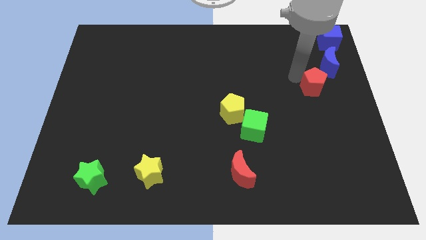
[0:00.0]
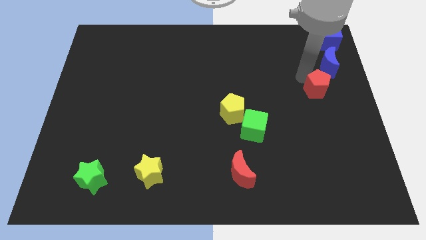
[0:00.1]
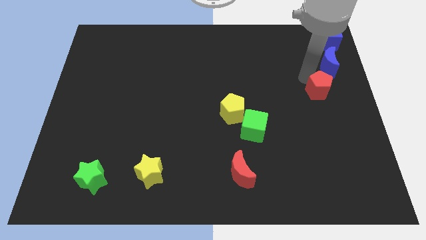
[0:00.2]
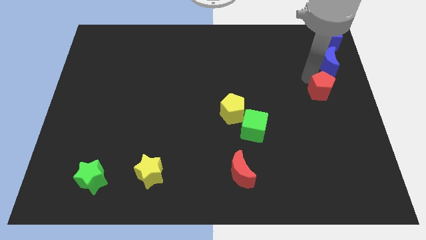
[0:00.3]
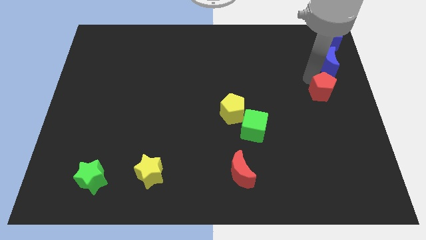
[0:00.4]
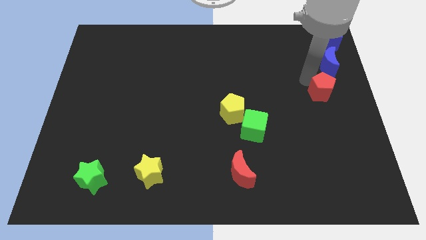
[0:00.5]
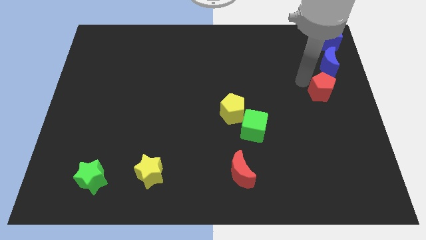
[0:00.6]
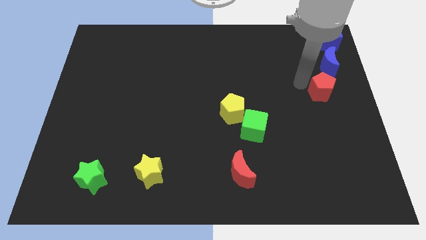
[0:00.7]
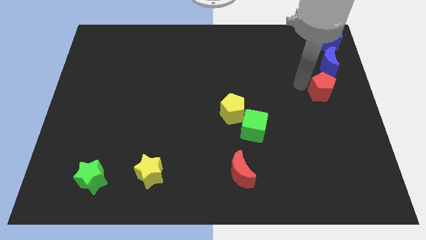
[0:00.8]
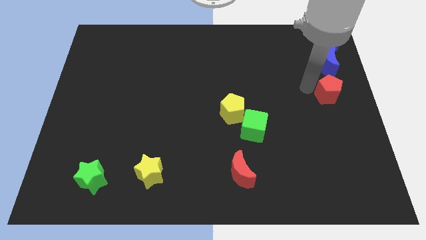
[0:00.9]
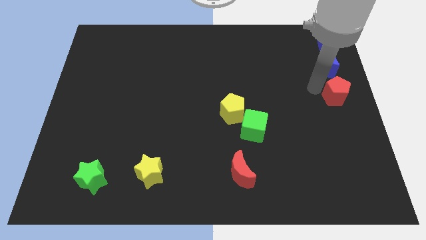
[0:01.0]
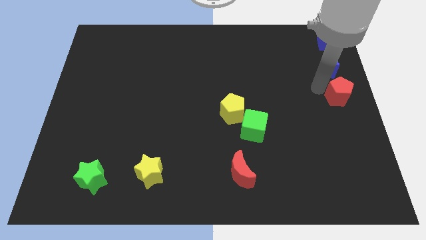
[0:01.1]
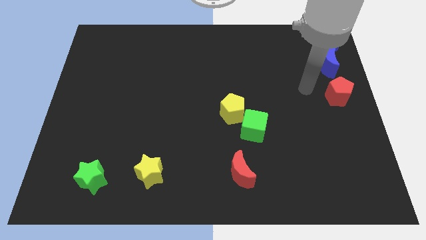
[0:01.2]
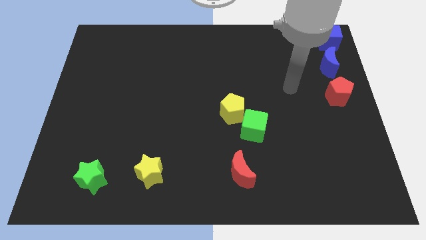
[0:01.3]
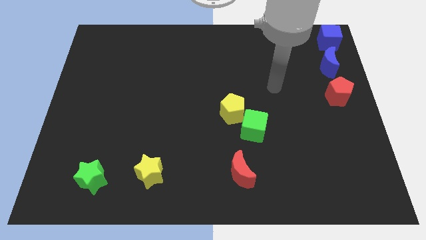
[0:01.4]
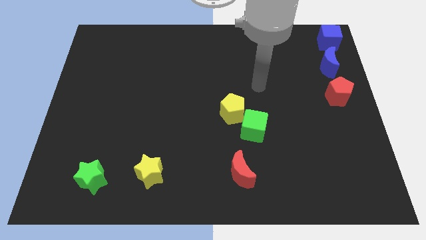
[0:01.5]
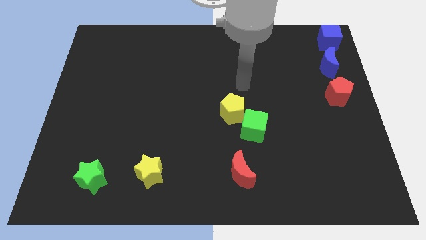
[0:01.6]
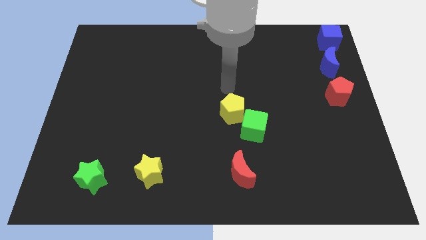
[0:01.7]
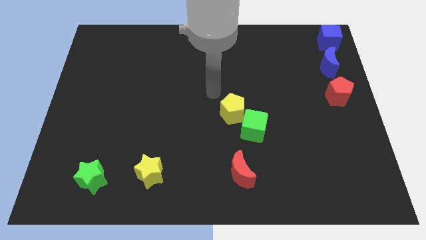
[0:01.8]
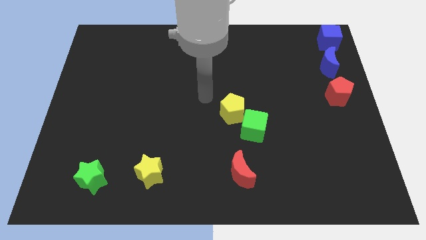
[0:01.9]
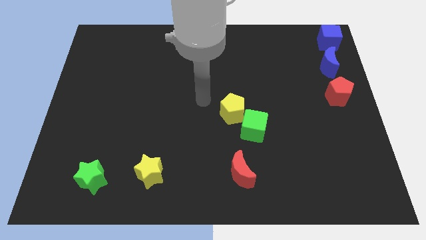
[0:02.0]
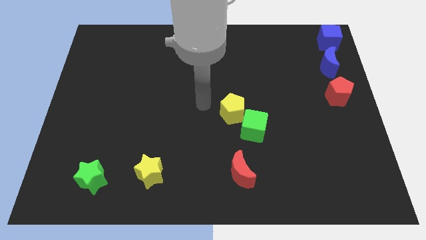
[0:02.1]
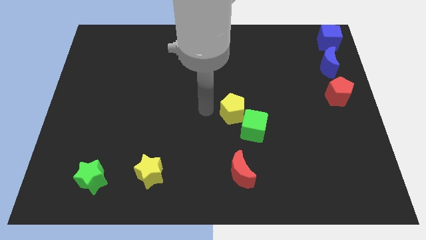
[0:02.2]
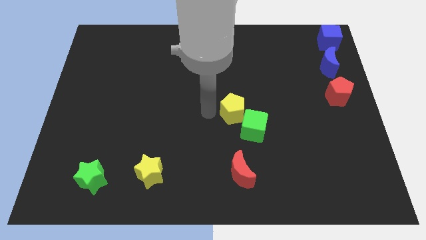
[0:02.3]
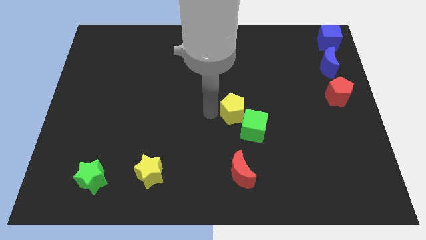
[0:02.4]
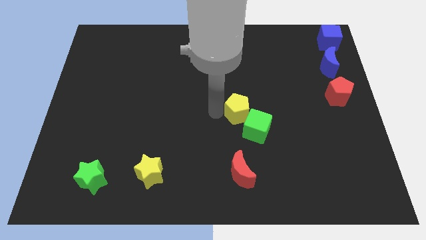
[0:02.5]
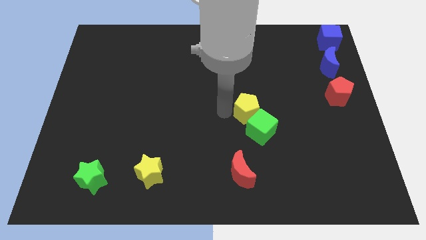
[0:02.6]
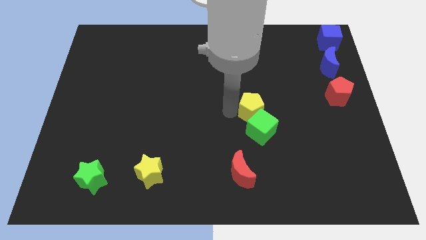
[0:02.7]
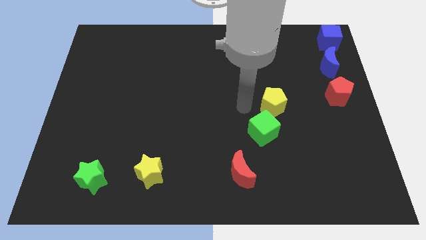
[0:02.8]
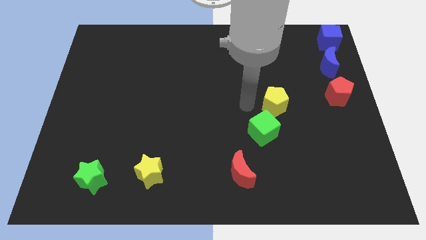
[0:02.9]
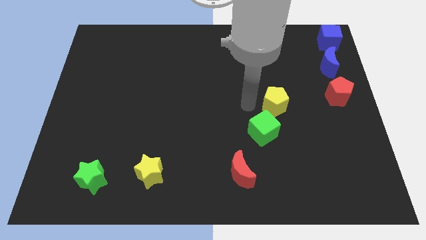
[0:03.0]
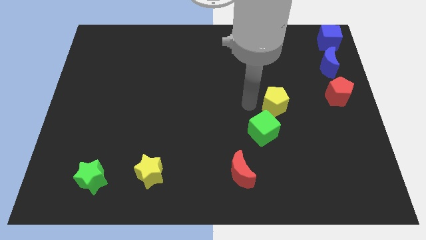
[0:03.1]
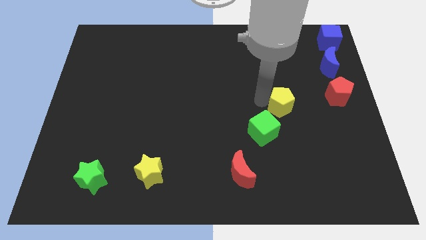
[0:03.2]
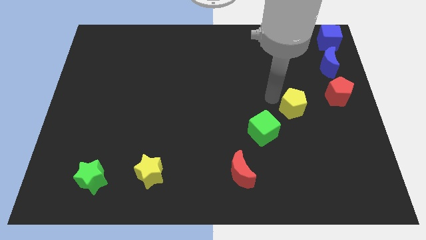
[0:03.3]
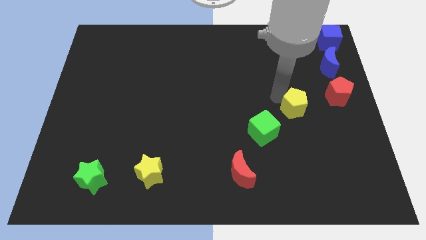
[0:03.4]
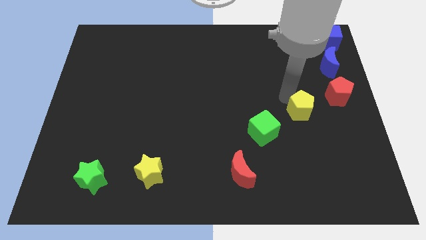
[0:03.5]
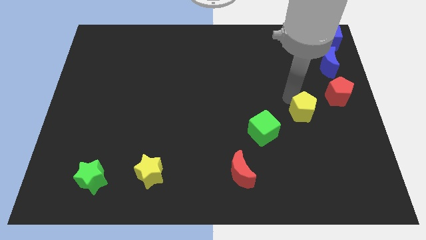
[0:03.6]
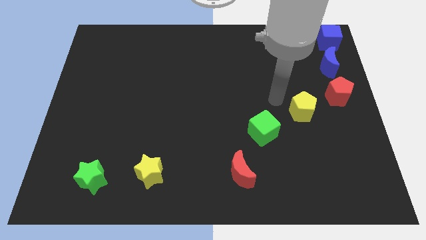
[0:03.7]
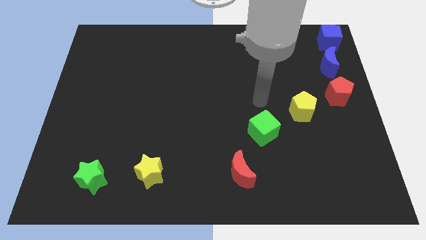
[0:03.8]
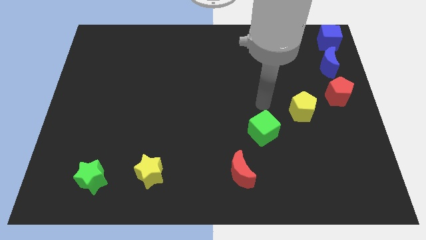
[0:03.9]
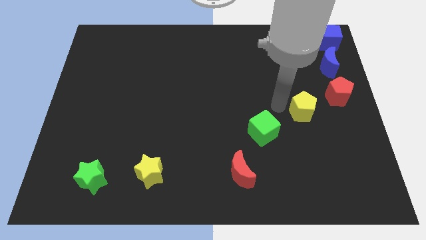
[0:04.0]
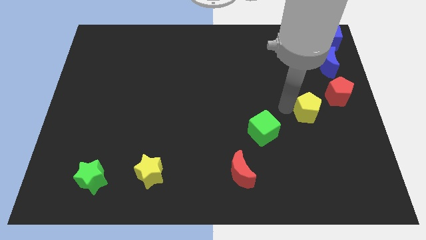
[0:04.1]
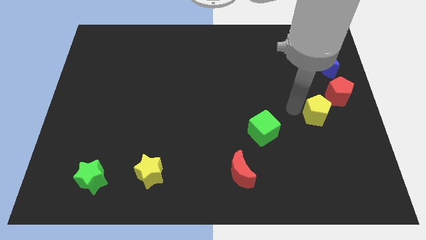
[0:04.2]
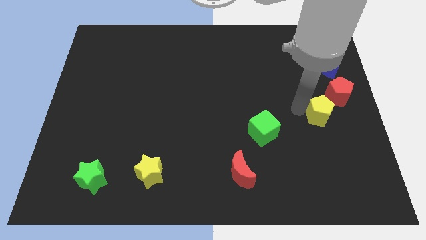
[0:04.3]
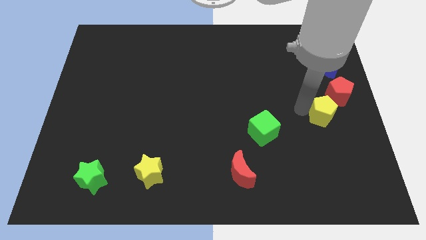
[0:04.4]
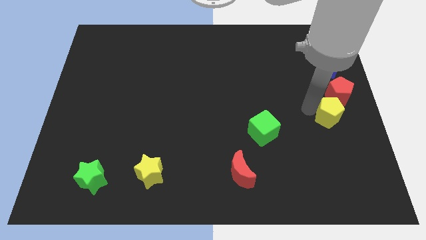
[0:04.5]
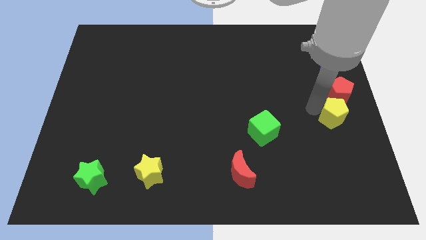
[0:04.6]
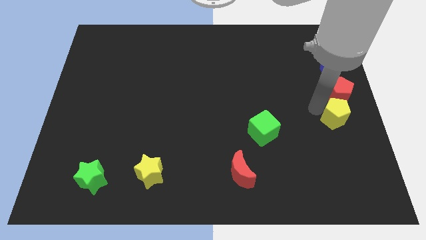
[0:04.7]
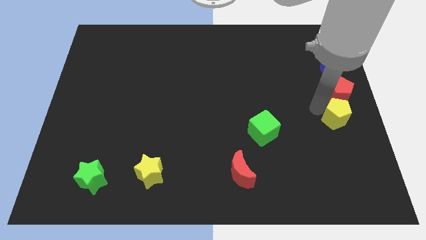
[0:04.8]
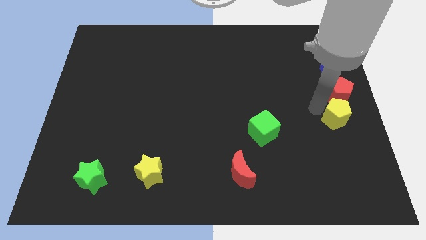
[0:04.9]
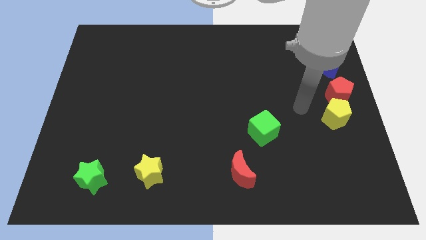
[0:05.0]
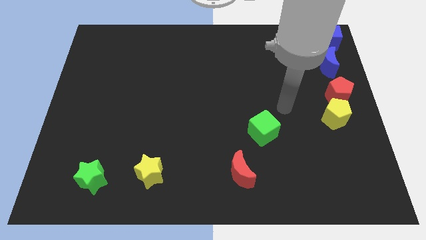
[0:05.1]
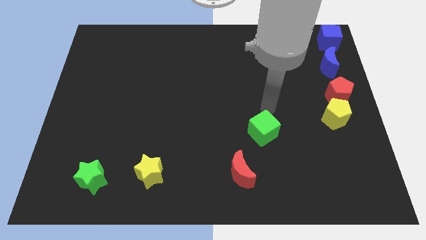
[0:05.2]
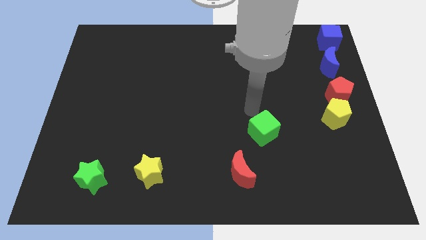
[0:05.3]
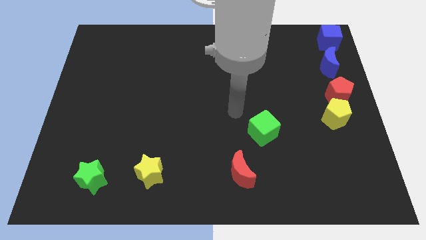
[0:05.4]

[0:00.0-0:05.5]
place the yellow pentagon below the red pentagon

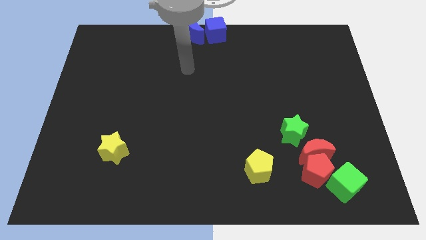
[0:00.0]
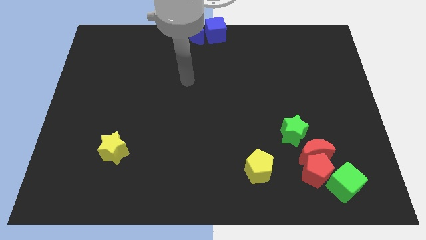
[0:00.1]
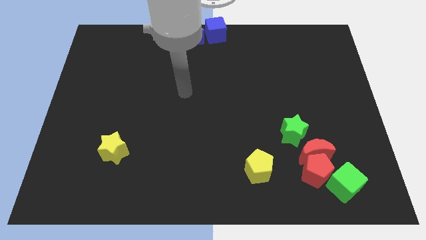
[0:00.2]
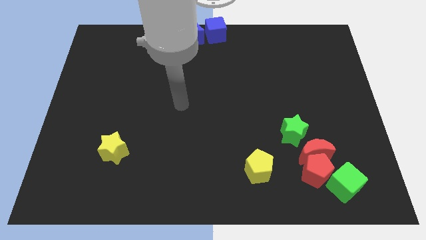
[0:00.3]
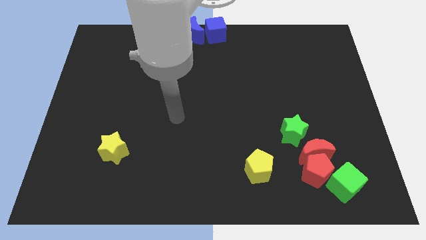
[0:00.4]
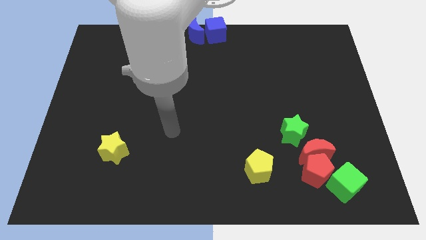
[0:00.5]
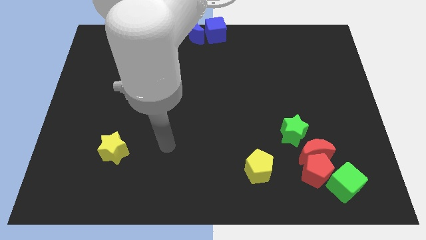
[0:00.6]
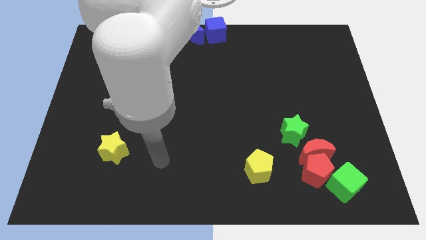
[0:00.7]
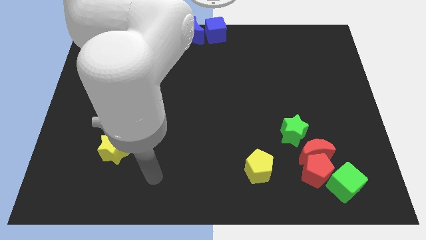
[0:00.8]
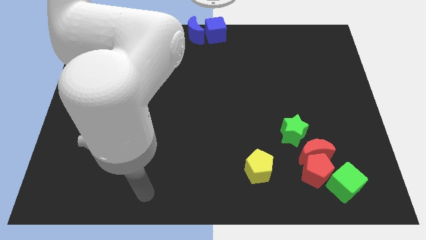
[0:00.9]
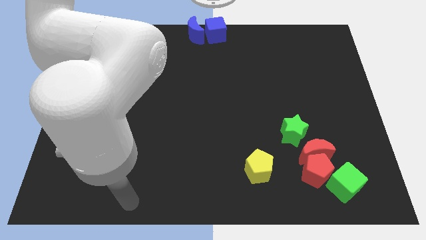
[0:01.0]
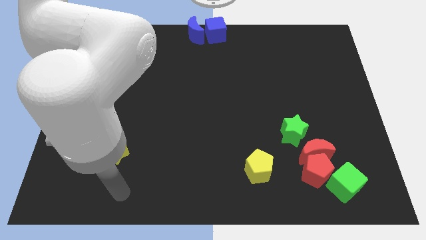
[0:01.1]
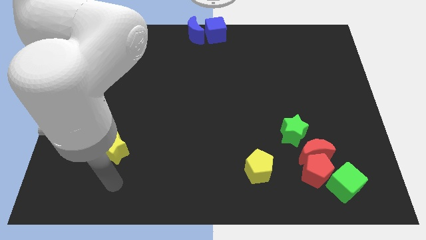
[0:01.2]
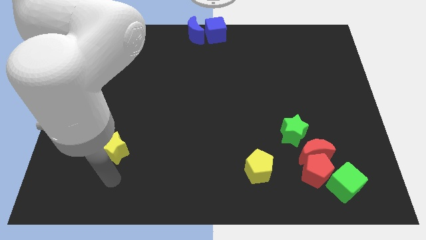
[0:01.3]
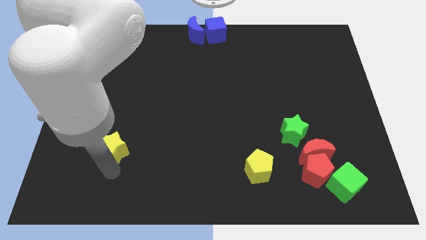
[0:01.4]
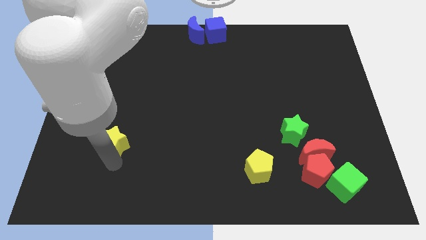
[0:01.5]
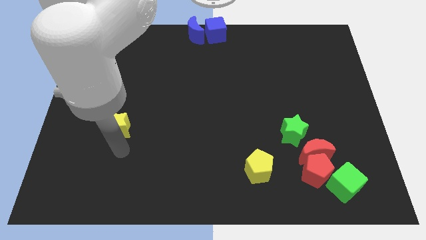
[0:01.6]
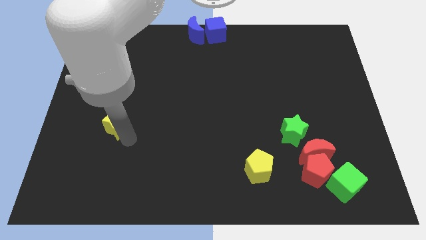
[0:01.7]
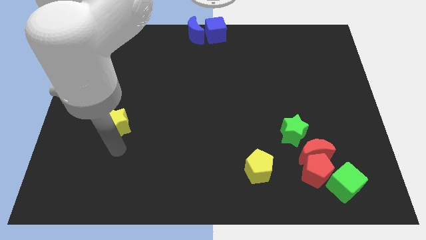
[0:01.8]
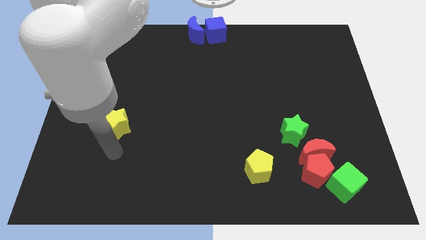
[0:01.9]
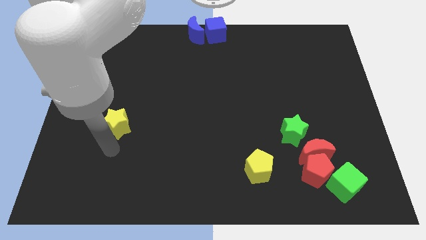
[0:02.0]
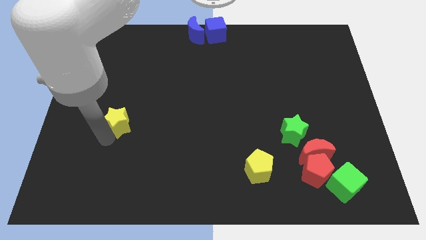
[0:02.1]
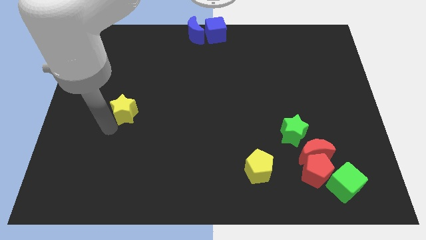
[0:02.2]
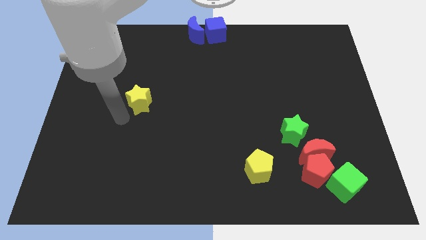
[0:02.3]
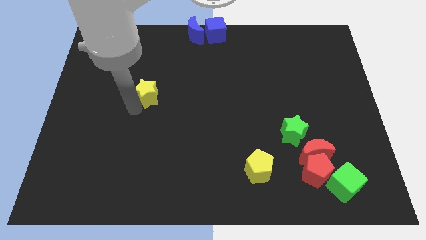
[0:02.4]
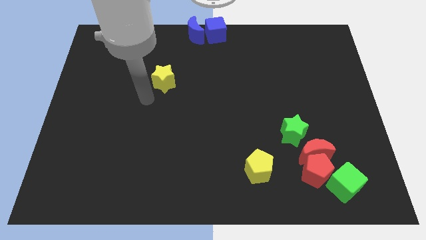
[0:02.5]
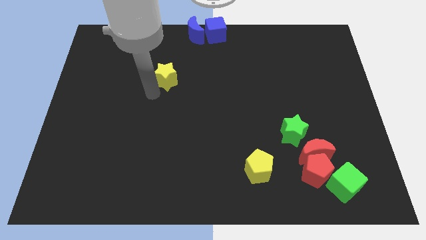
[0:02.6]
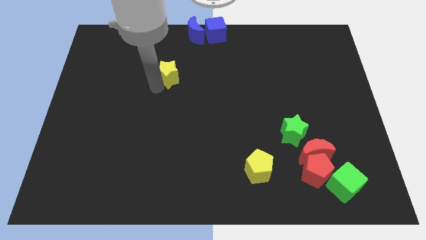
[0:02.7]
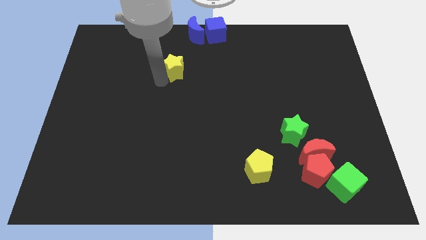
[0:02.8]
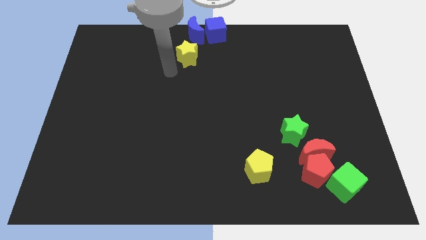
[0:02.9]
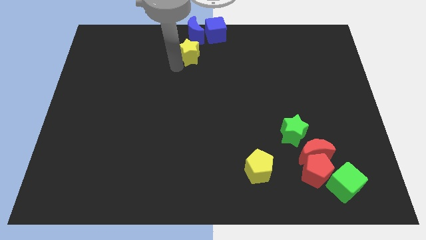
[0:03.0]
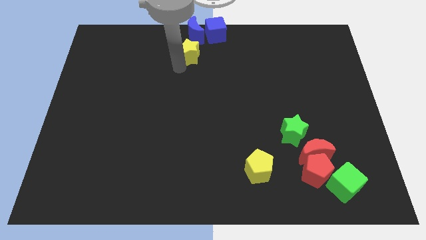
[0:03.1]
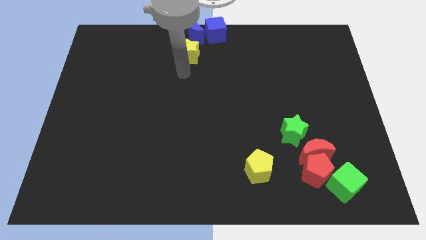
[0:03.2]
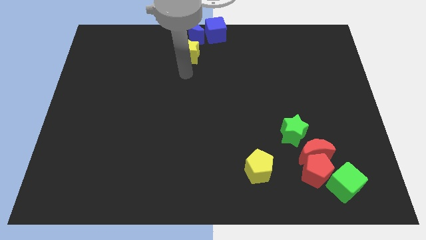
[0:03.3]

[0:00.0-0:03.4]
move the yellow star to the bottom side of the blue moon

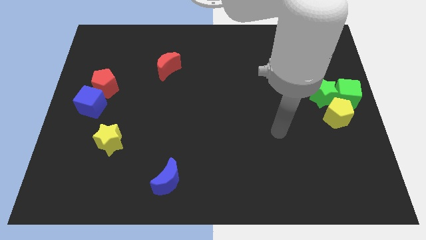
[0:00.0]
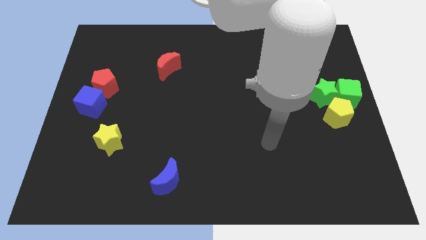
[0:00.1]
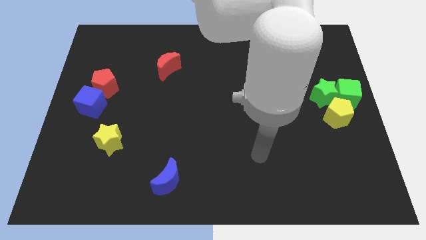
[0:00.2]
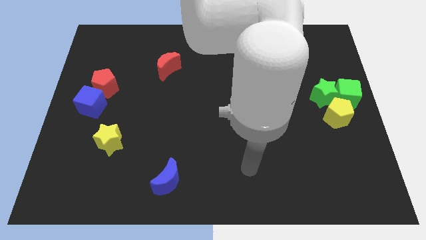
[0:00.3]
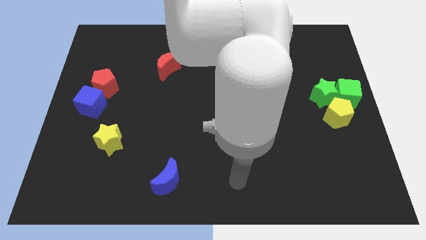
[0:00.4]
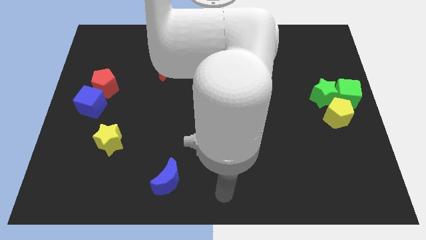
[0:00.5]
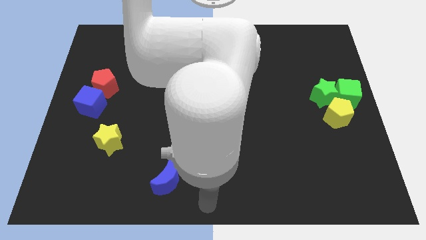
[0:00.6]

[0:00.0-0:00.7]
move your hand to the bottom center of the board
